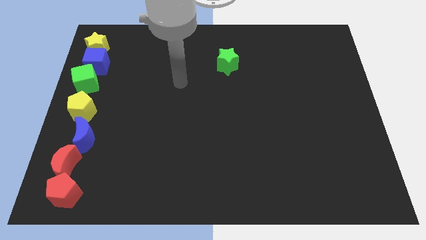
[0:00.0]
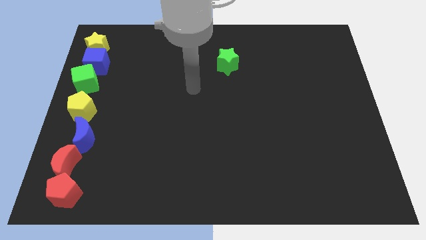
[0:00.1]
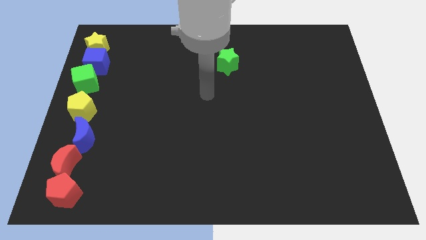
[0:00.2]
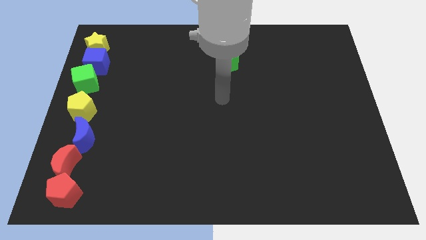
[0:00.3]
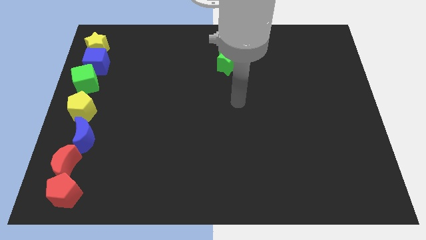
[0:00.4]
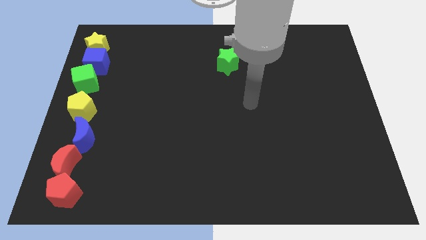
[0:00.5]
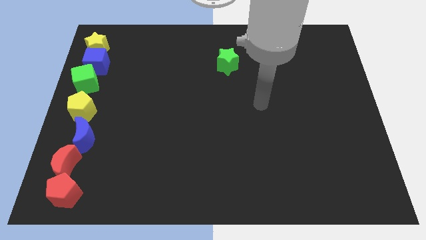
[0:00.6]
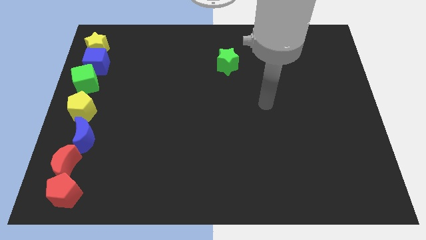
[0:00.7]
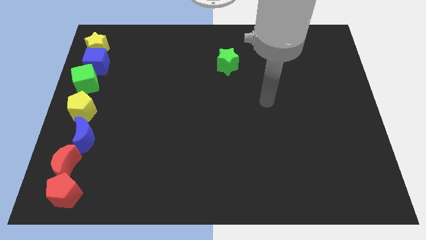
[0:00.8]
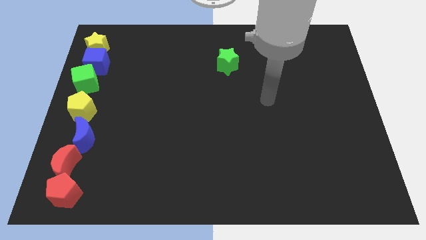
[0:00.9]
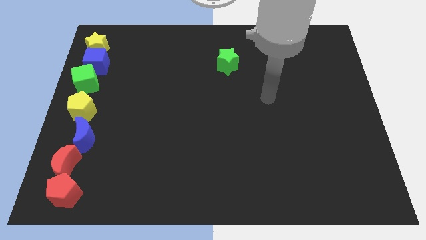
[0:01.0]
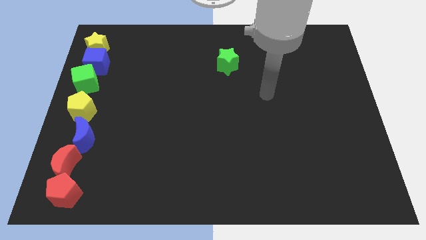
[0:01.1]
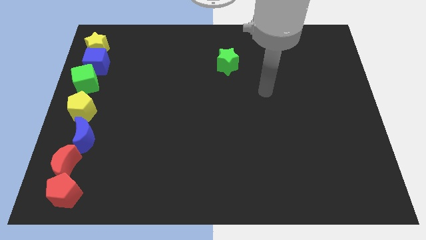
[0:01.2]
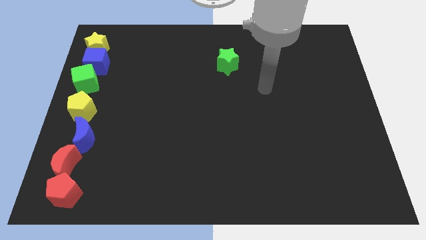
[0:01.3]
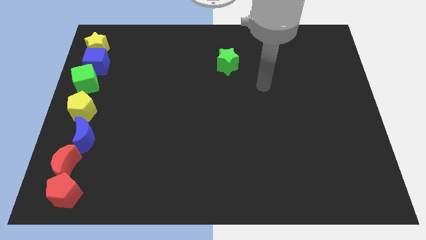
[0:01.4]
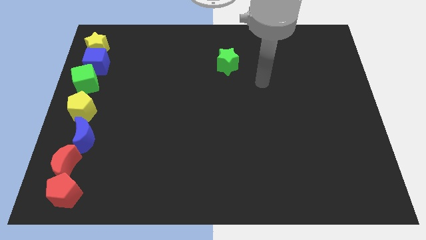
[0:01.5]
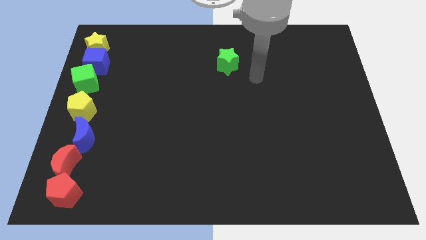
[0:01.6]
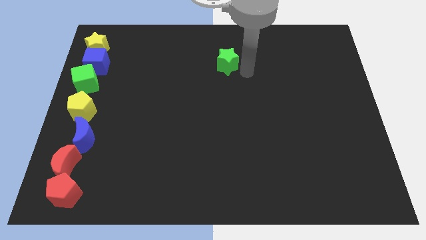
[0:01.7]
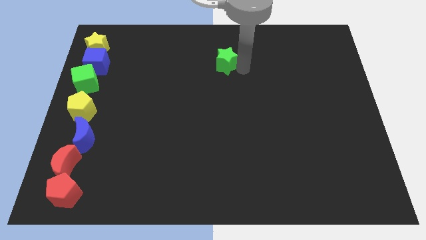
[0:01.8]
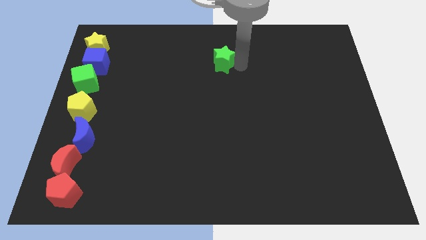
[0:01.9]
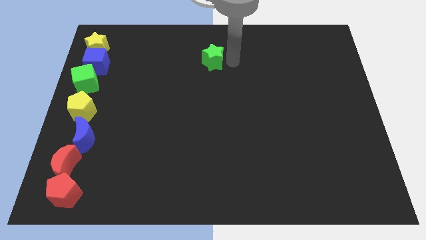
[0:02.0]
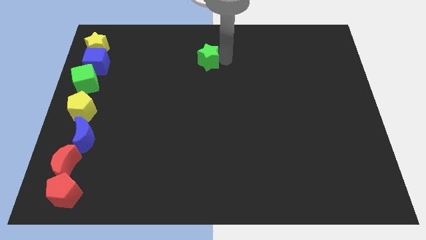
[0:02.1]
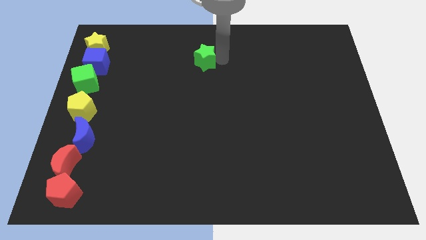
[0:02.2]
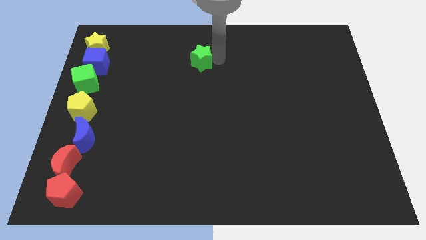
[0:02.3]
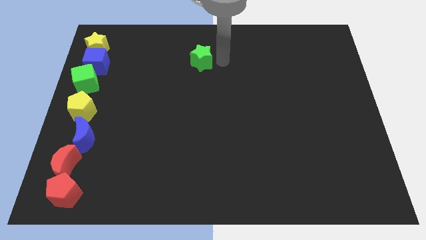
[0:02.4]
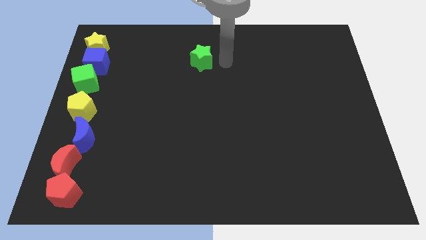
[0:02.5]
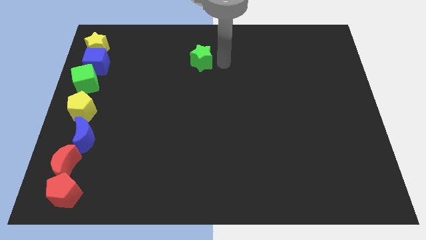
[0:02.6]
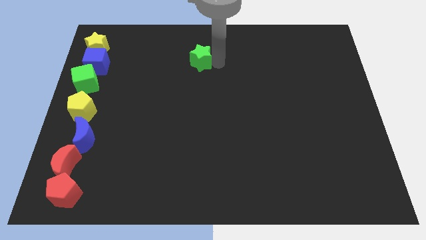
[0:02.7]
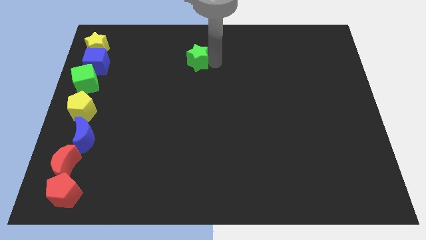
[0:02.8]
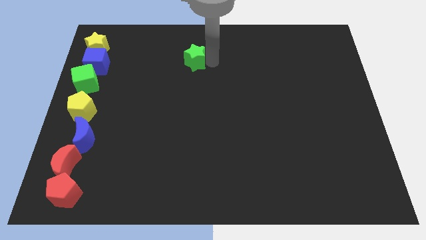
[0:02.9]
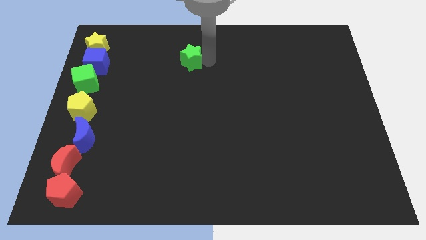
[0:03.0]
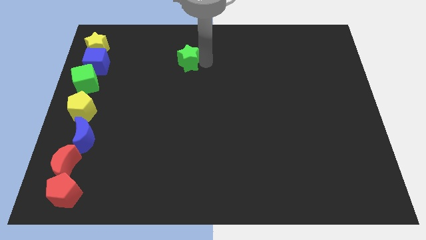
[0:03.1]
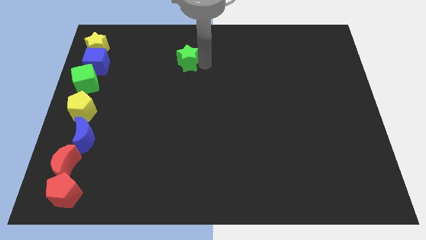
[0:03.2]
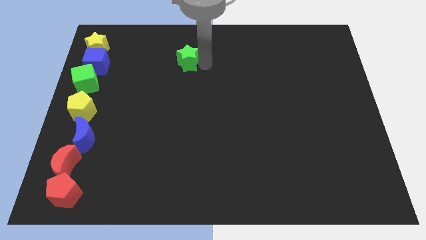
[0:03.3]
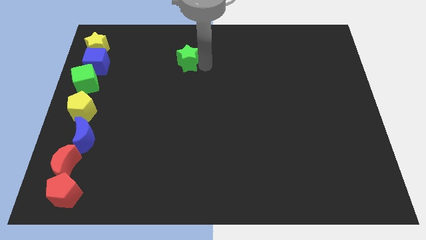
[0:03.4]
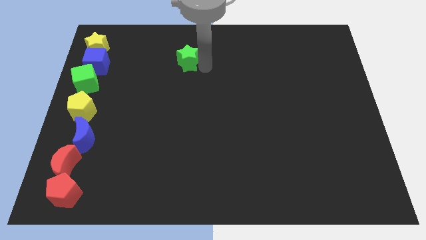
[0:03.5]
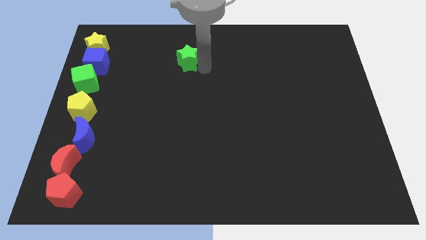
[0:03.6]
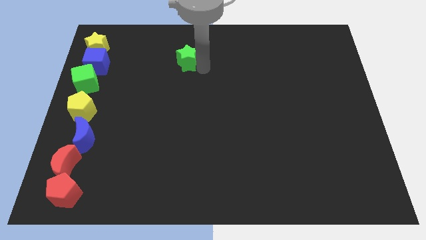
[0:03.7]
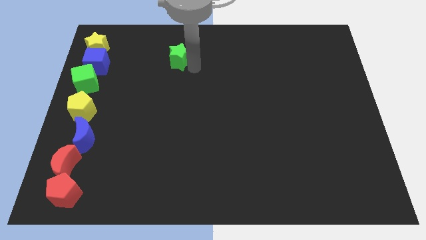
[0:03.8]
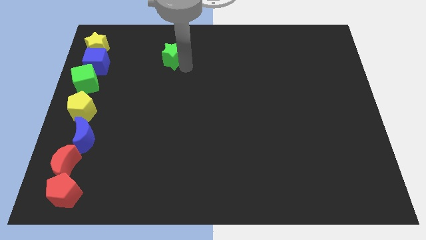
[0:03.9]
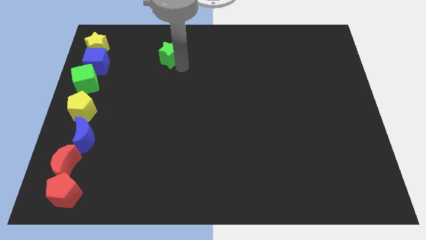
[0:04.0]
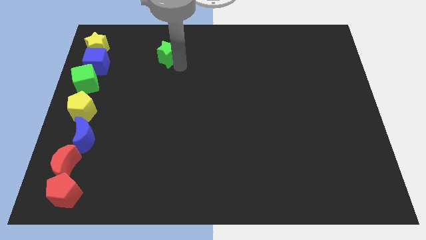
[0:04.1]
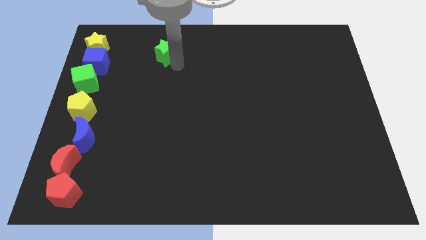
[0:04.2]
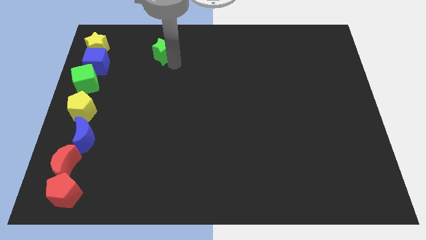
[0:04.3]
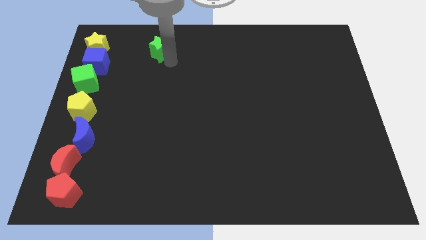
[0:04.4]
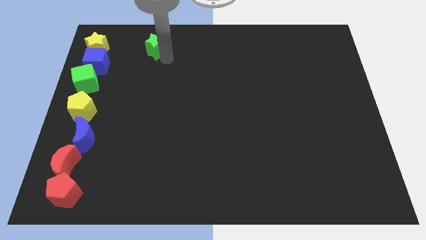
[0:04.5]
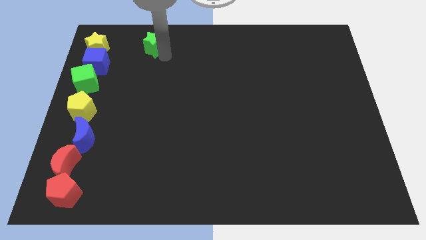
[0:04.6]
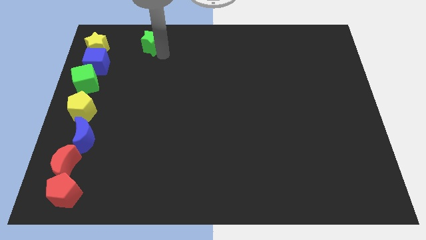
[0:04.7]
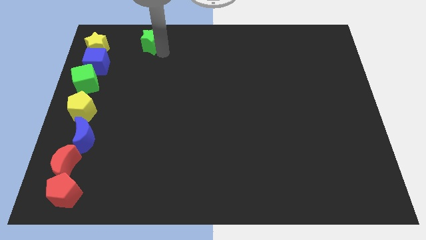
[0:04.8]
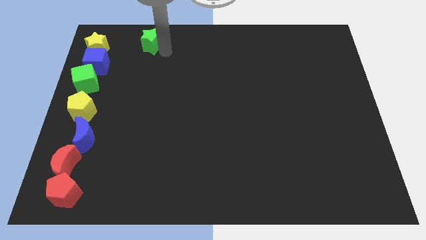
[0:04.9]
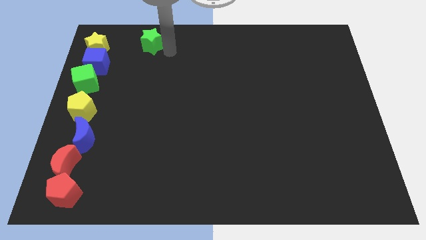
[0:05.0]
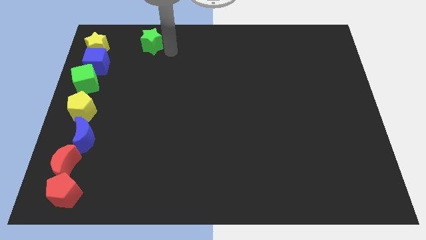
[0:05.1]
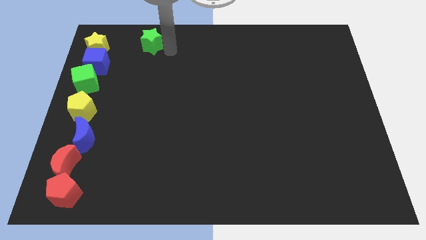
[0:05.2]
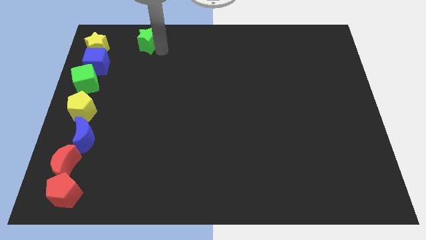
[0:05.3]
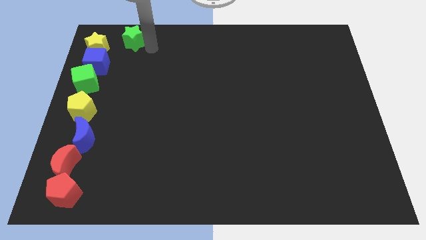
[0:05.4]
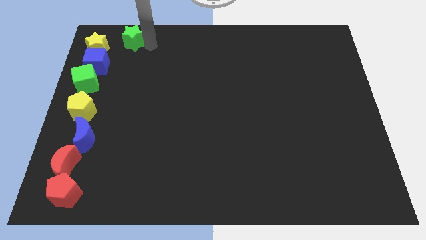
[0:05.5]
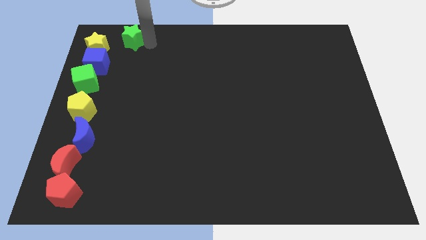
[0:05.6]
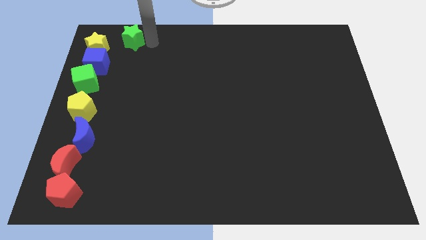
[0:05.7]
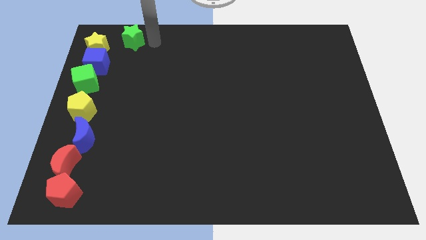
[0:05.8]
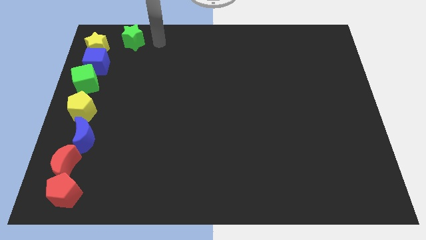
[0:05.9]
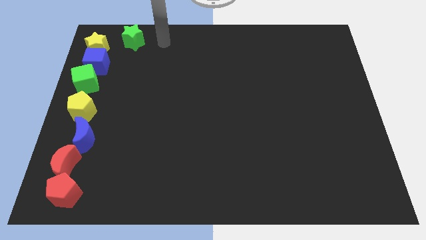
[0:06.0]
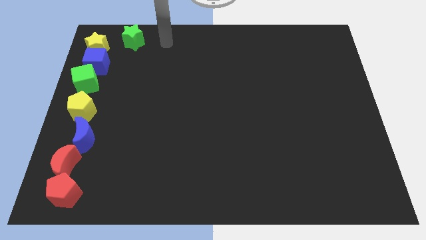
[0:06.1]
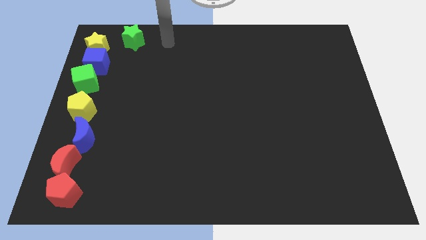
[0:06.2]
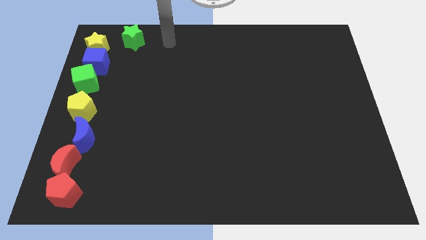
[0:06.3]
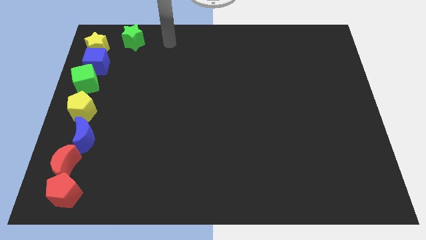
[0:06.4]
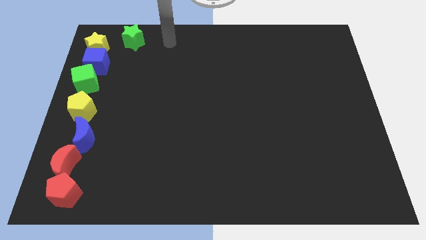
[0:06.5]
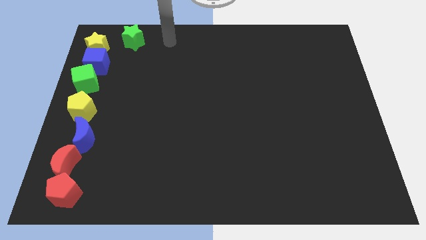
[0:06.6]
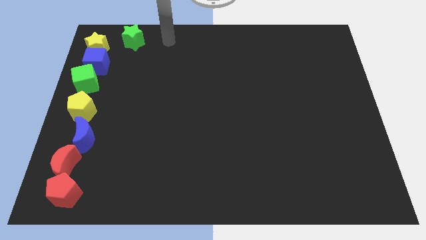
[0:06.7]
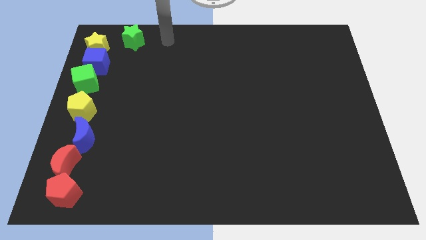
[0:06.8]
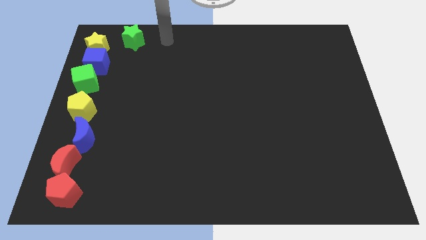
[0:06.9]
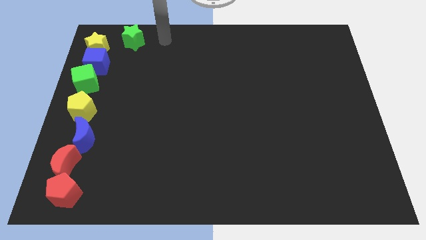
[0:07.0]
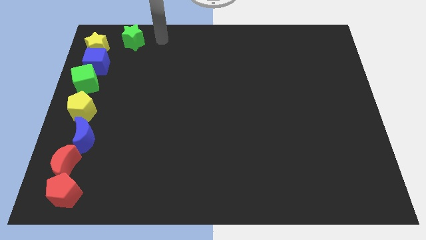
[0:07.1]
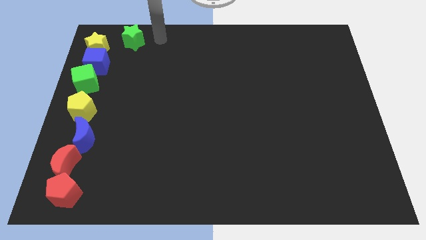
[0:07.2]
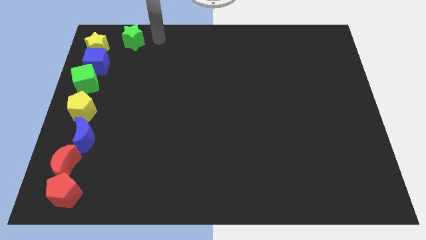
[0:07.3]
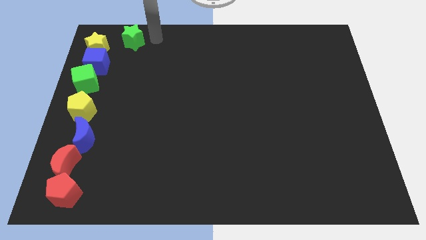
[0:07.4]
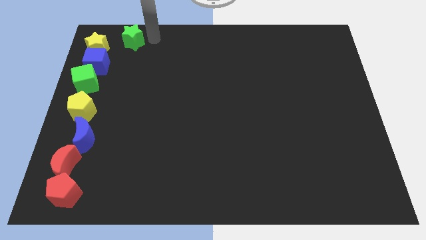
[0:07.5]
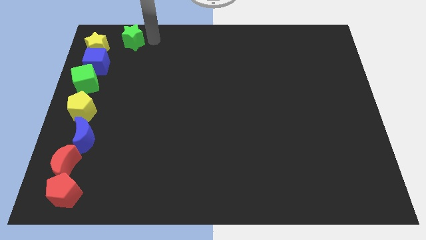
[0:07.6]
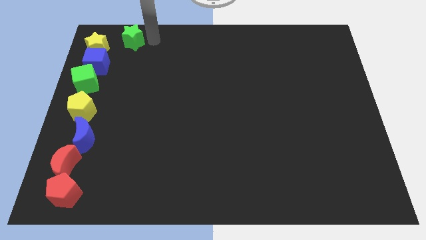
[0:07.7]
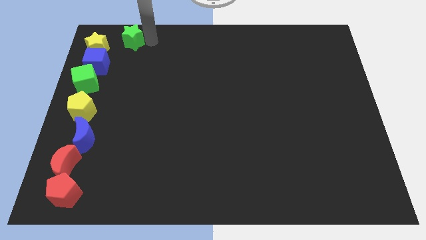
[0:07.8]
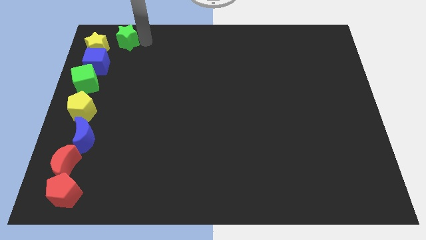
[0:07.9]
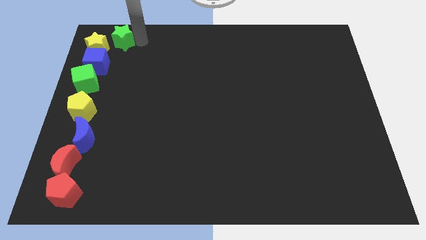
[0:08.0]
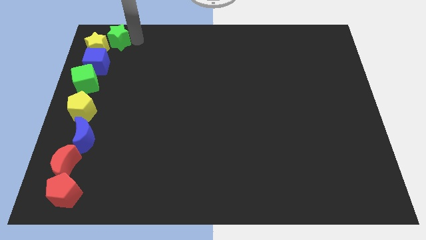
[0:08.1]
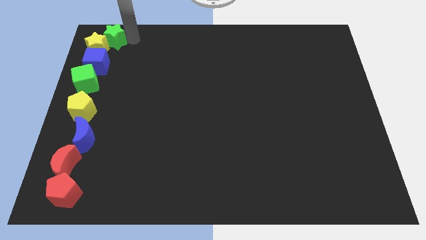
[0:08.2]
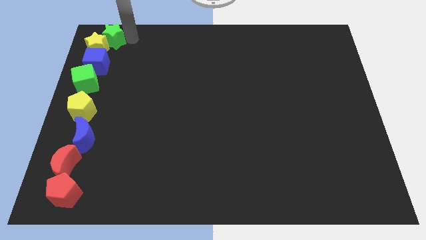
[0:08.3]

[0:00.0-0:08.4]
push the green star into the yellow star

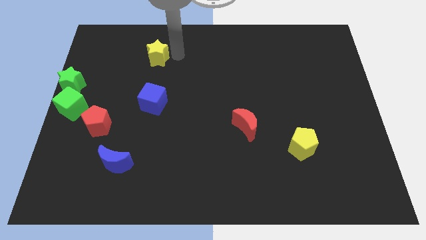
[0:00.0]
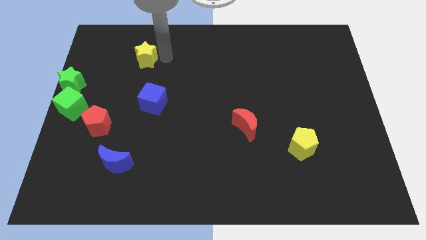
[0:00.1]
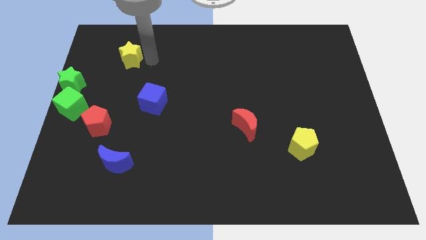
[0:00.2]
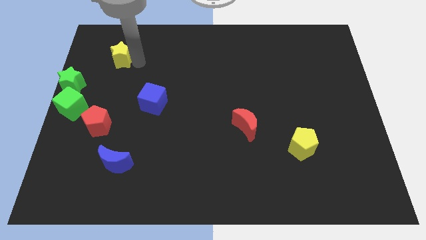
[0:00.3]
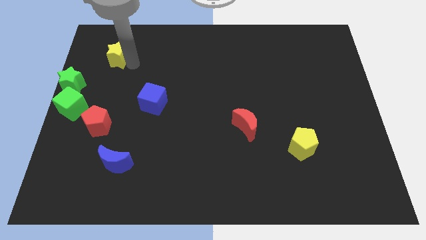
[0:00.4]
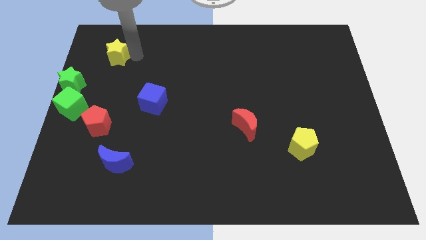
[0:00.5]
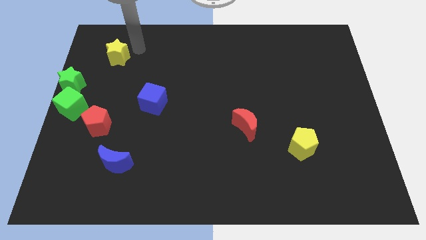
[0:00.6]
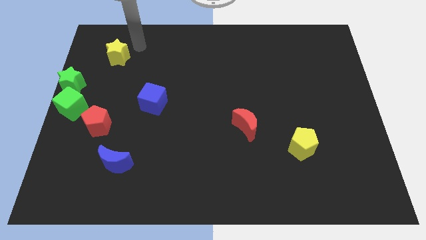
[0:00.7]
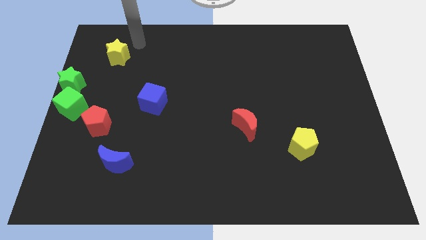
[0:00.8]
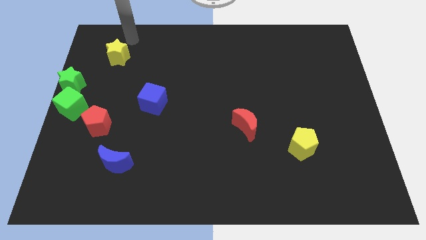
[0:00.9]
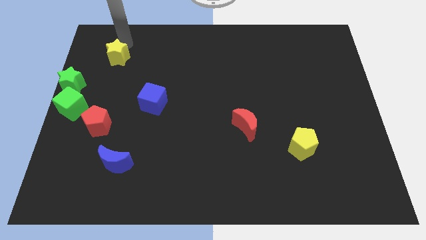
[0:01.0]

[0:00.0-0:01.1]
move the yellow star vertically above the red pentagon
